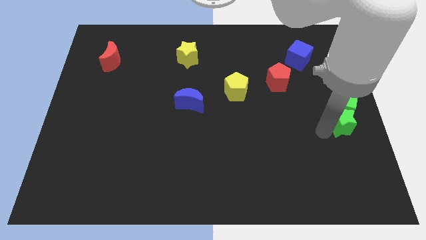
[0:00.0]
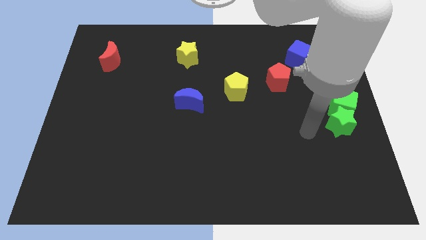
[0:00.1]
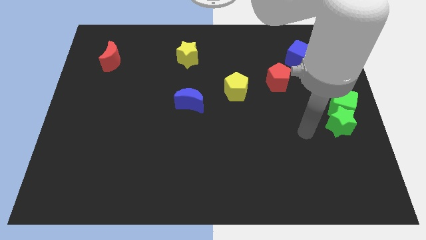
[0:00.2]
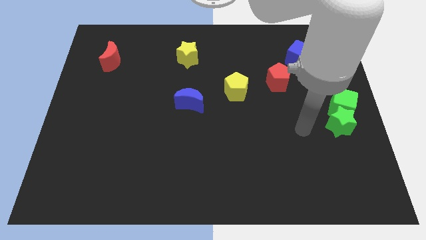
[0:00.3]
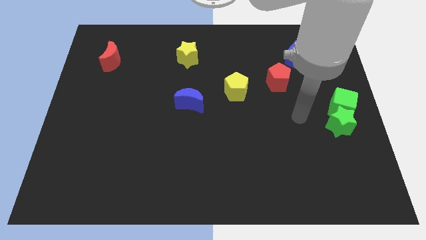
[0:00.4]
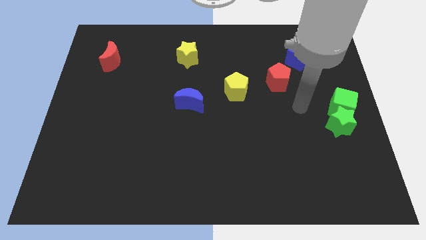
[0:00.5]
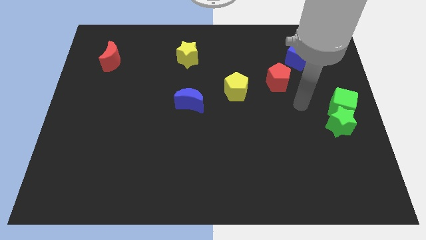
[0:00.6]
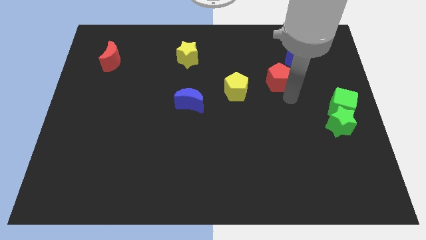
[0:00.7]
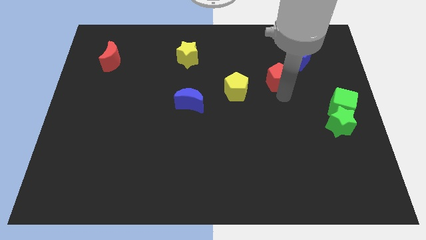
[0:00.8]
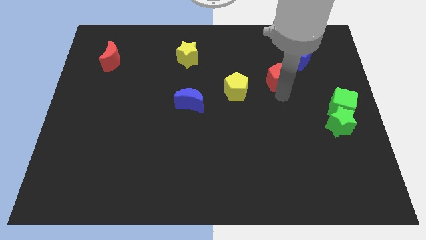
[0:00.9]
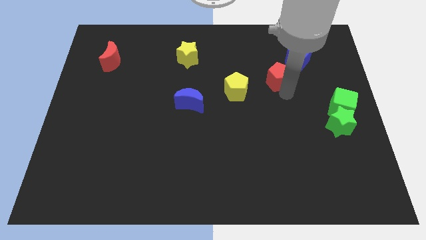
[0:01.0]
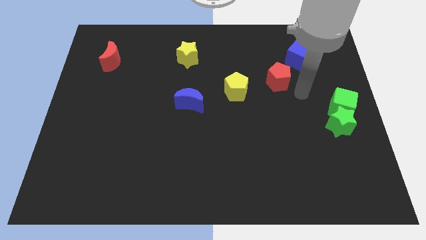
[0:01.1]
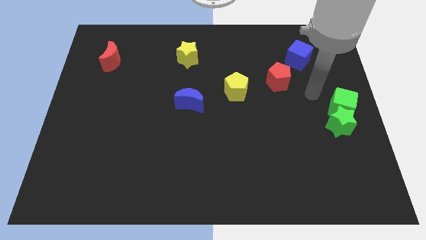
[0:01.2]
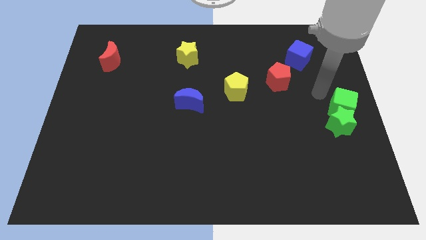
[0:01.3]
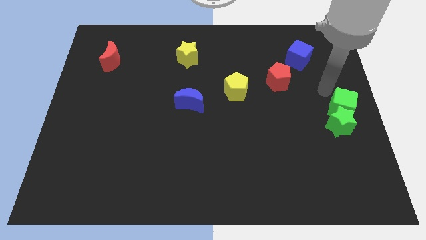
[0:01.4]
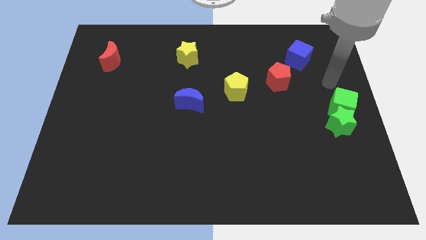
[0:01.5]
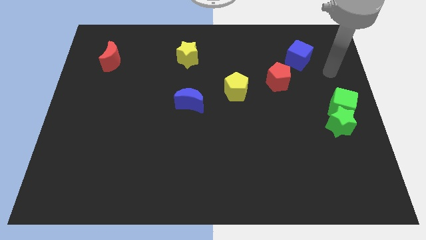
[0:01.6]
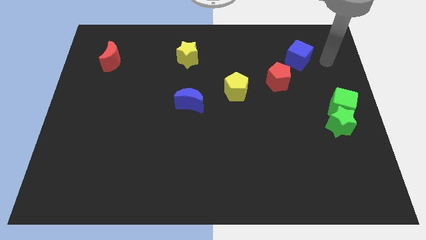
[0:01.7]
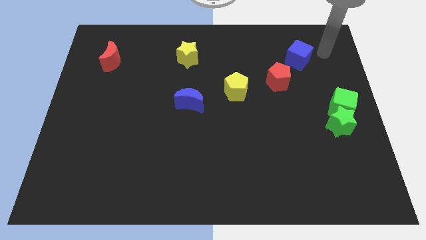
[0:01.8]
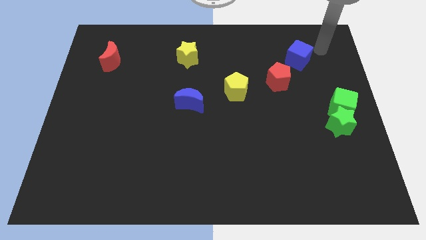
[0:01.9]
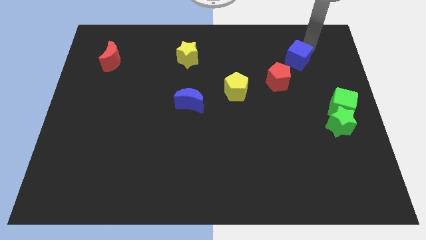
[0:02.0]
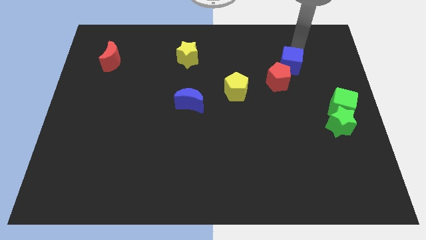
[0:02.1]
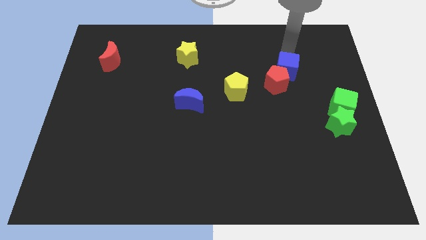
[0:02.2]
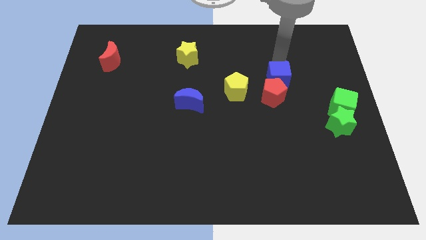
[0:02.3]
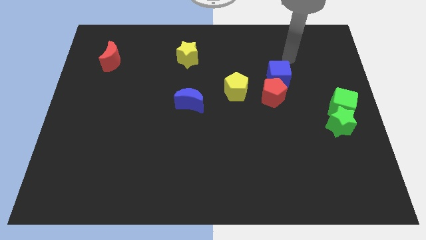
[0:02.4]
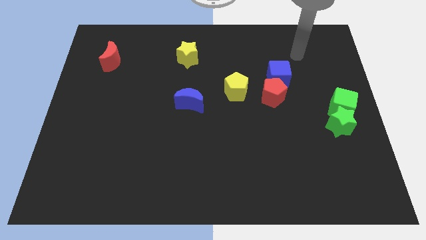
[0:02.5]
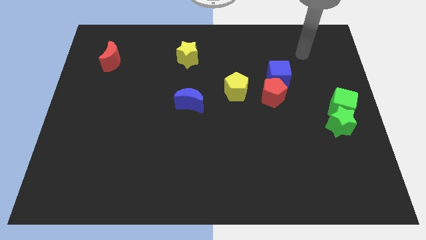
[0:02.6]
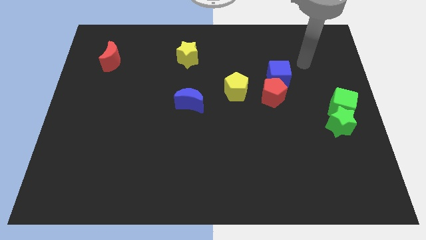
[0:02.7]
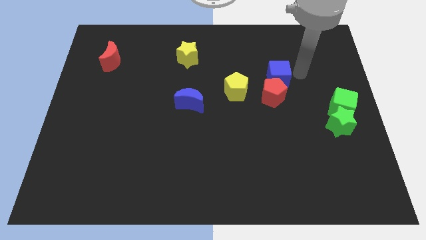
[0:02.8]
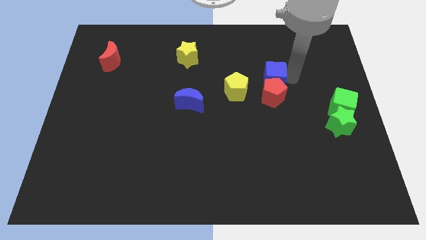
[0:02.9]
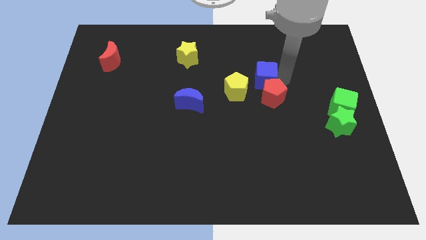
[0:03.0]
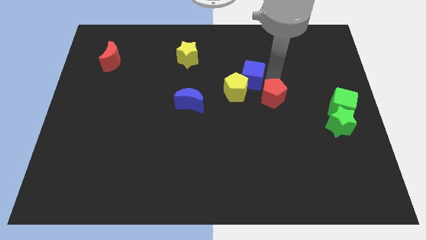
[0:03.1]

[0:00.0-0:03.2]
push the blue cube into the red pentagon

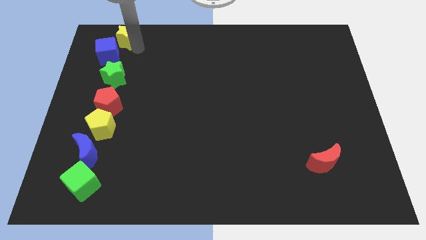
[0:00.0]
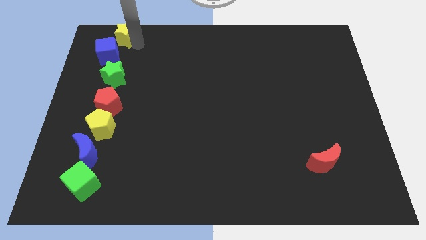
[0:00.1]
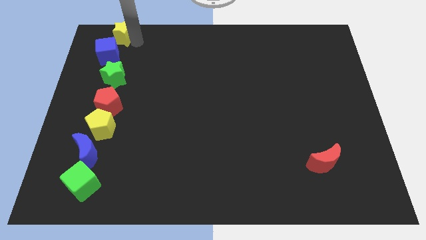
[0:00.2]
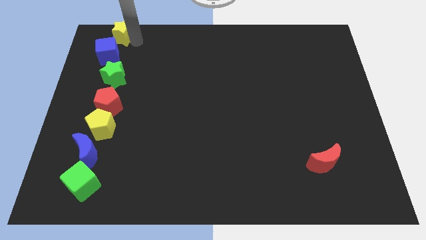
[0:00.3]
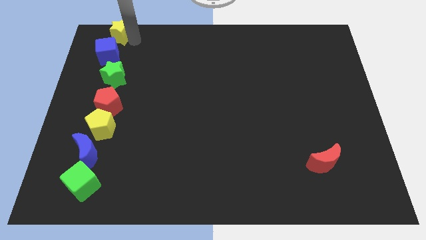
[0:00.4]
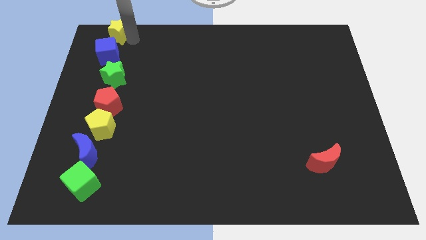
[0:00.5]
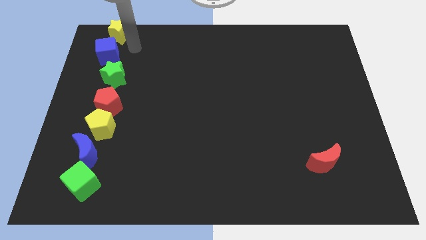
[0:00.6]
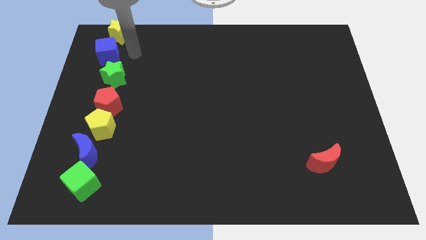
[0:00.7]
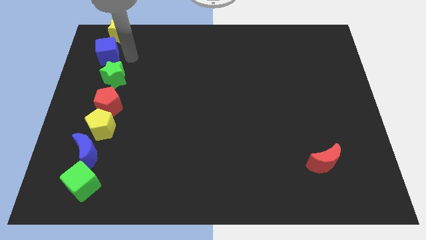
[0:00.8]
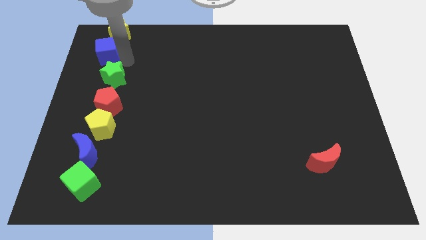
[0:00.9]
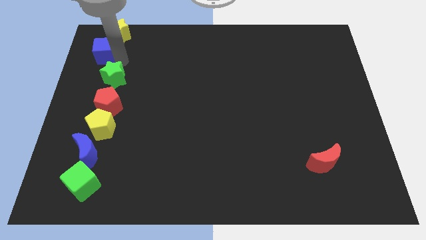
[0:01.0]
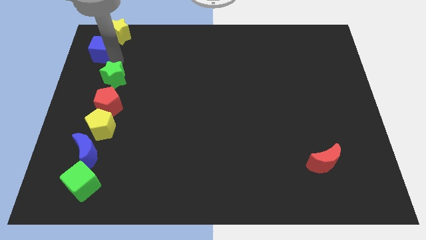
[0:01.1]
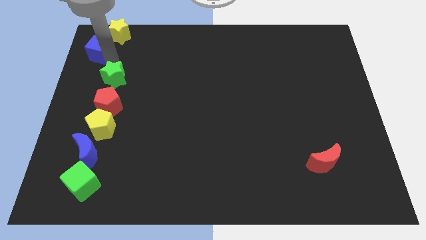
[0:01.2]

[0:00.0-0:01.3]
push the yellow star vertically to the top of the blue cube

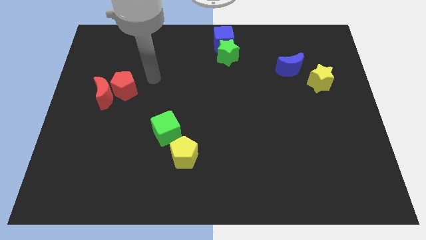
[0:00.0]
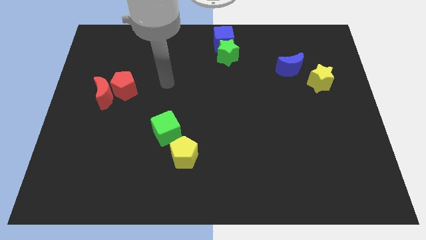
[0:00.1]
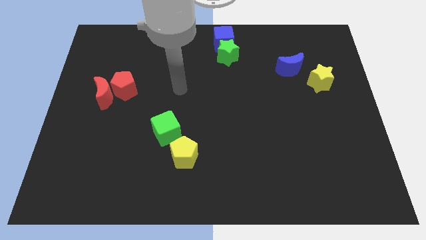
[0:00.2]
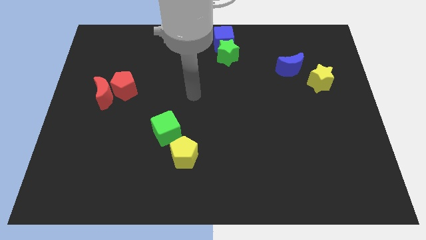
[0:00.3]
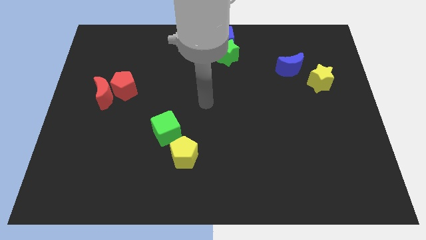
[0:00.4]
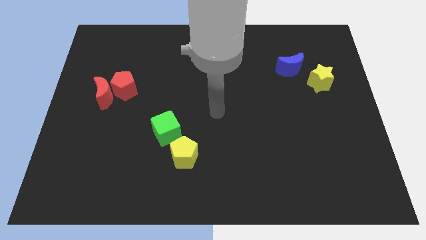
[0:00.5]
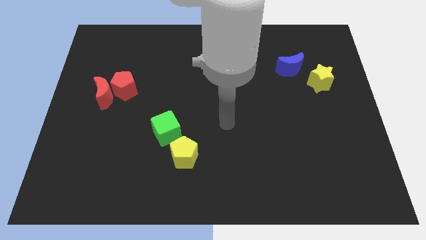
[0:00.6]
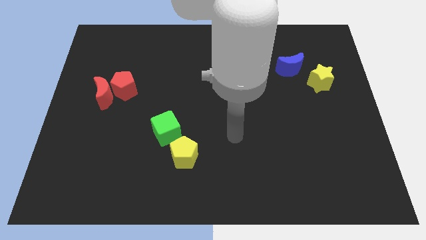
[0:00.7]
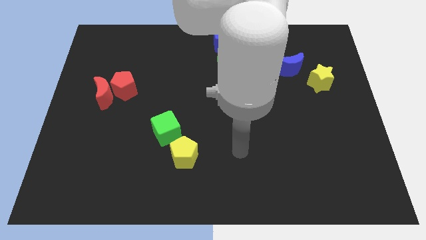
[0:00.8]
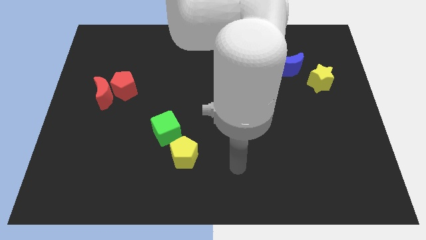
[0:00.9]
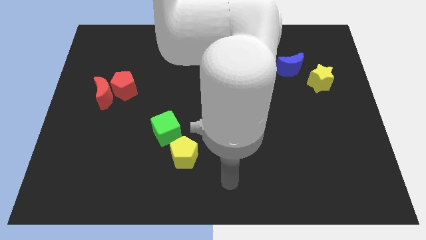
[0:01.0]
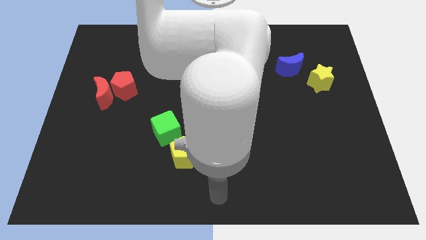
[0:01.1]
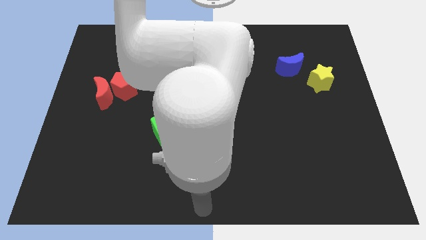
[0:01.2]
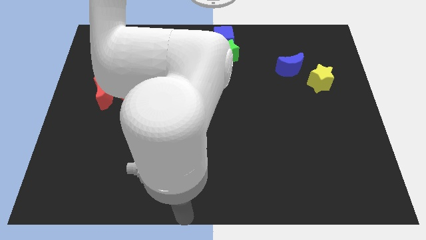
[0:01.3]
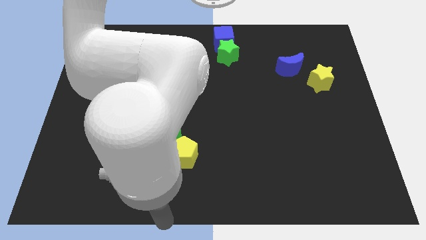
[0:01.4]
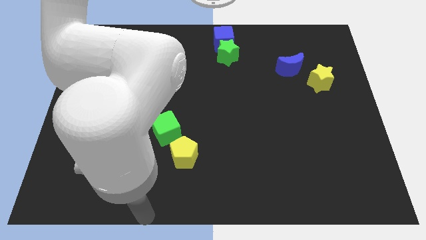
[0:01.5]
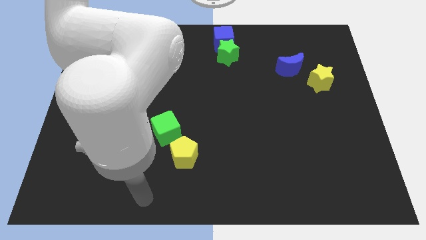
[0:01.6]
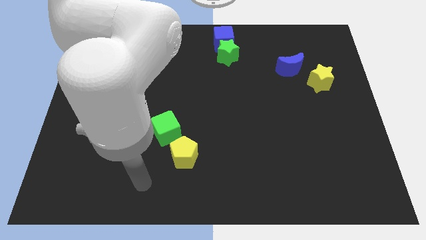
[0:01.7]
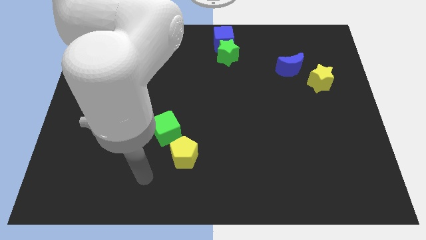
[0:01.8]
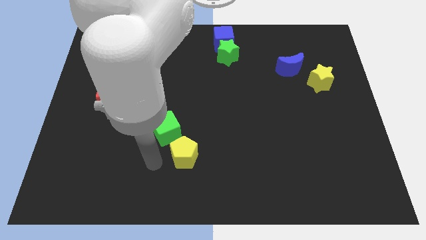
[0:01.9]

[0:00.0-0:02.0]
move the arm at the bottom of the green cube

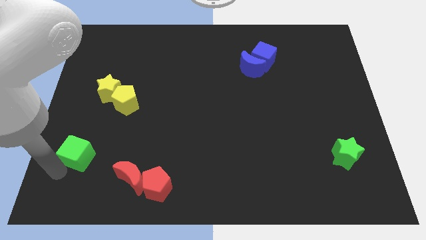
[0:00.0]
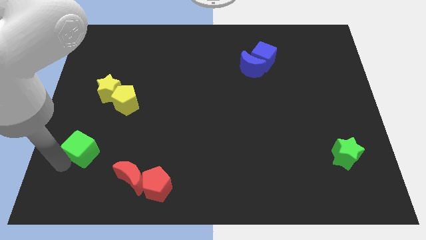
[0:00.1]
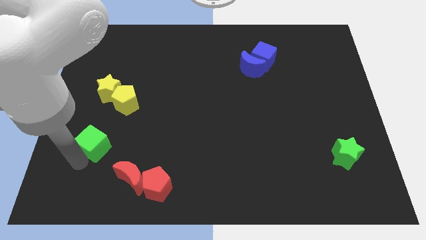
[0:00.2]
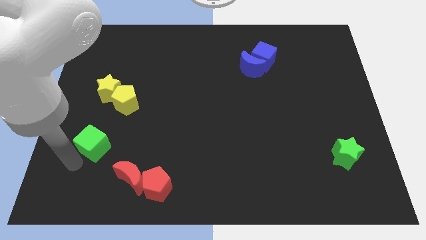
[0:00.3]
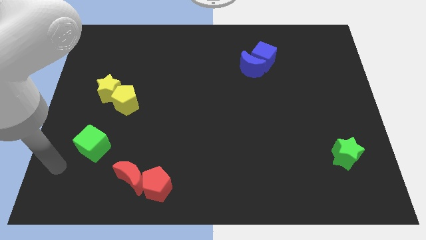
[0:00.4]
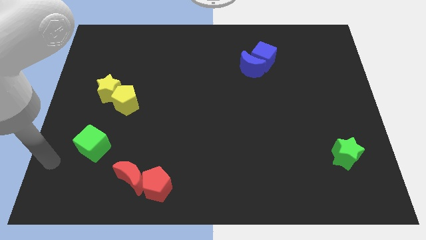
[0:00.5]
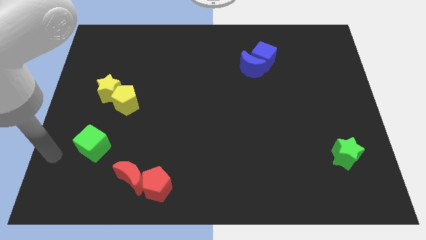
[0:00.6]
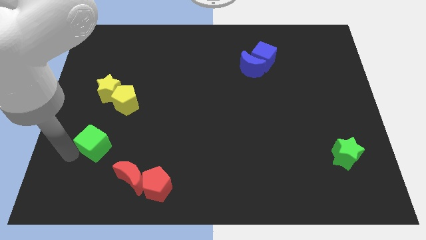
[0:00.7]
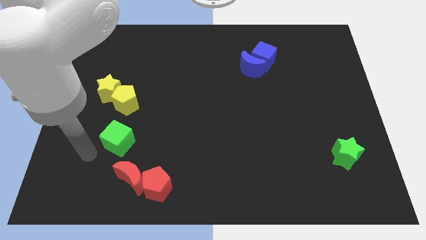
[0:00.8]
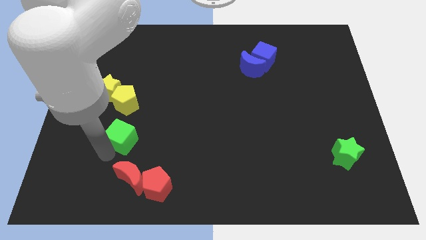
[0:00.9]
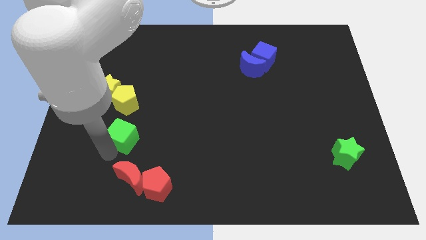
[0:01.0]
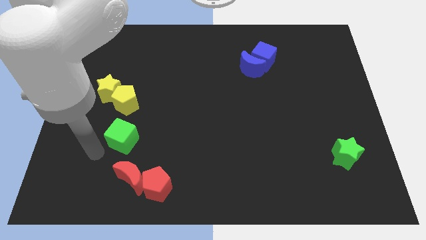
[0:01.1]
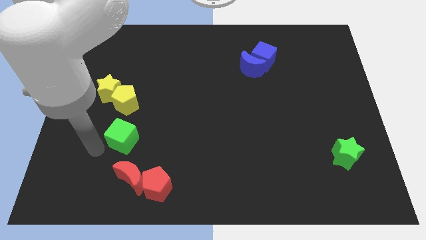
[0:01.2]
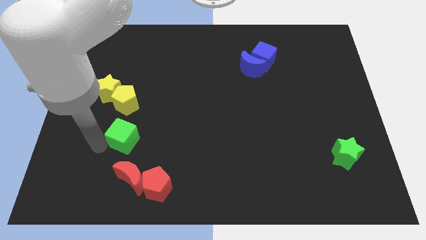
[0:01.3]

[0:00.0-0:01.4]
put the green cube between the yellow pentagon and red moon

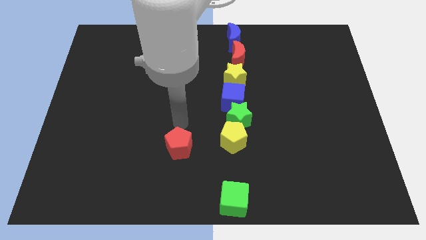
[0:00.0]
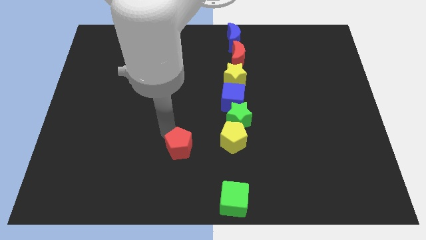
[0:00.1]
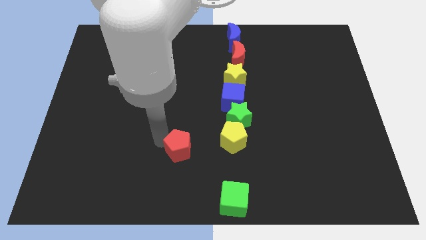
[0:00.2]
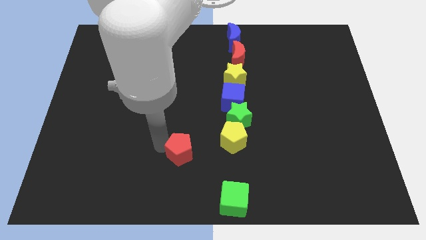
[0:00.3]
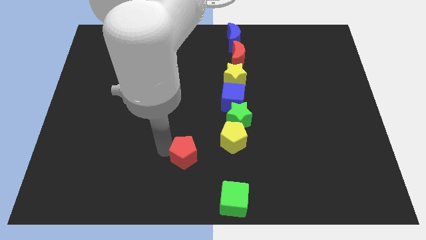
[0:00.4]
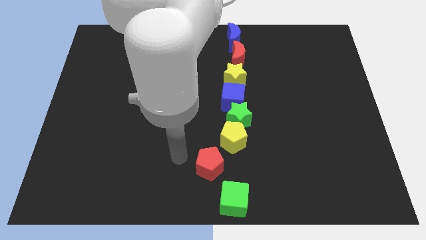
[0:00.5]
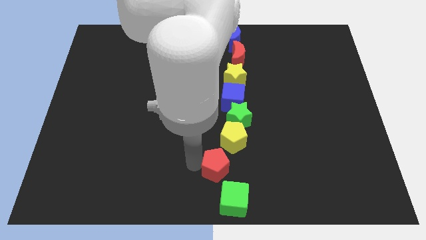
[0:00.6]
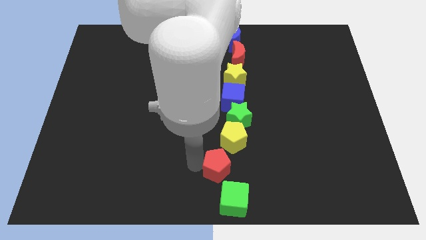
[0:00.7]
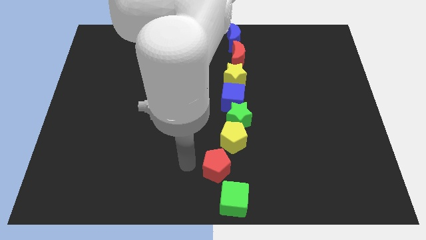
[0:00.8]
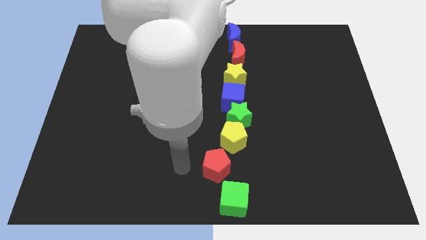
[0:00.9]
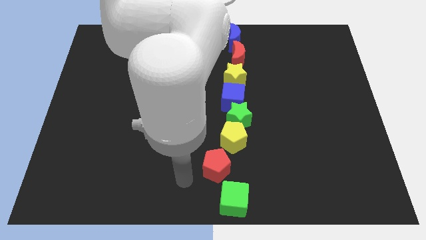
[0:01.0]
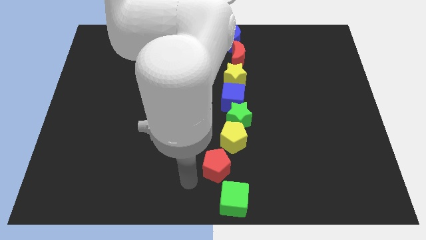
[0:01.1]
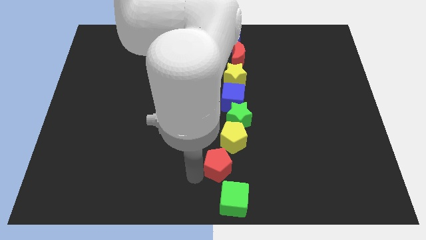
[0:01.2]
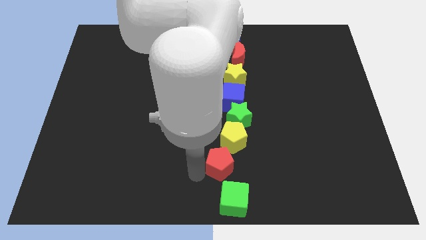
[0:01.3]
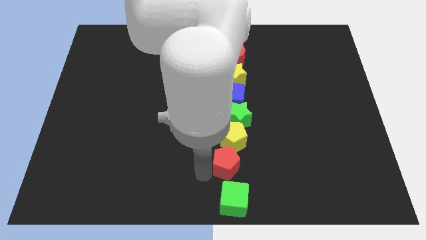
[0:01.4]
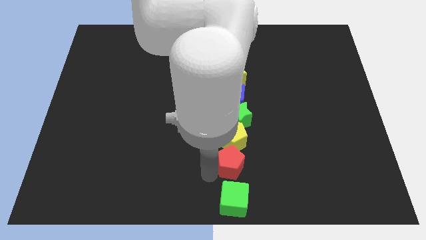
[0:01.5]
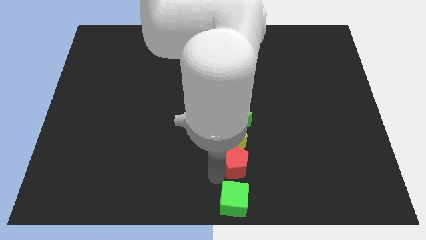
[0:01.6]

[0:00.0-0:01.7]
place the red pentagon to the bottom of the yellow pentagon
